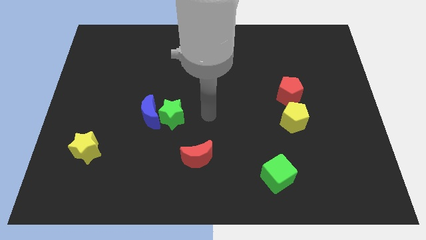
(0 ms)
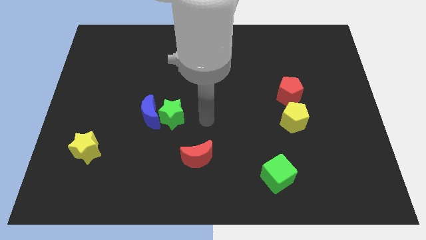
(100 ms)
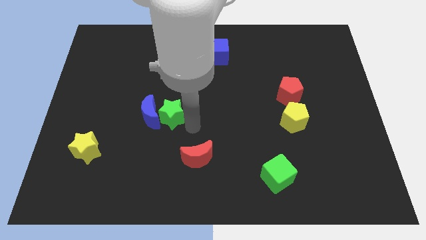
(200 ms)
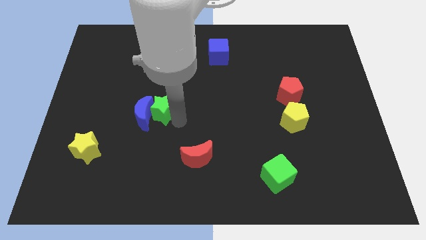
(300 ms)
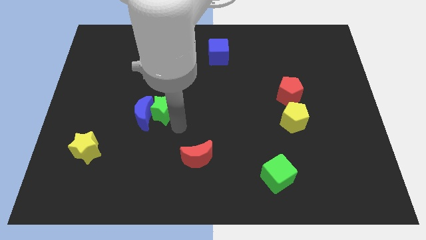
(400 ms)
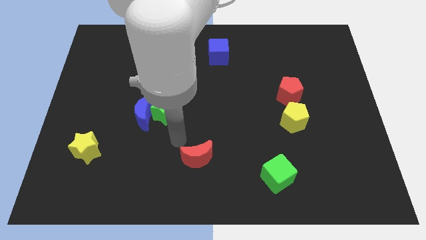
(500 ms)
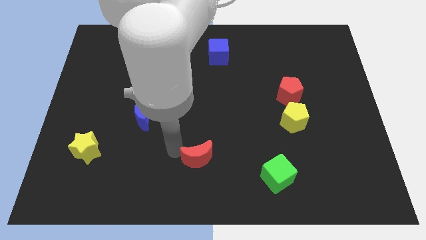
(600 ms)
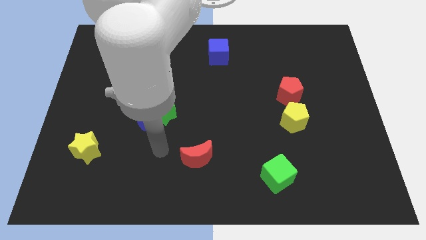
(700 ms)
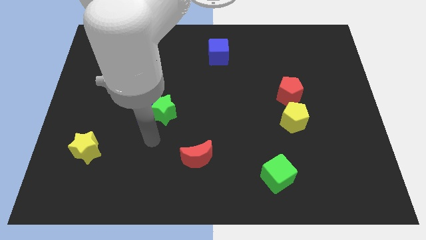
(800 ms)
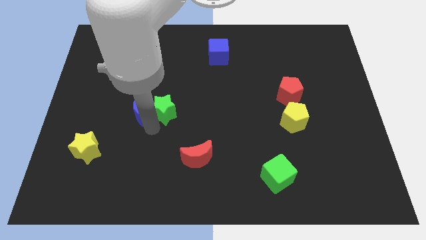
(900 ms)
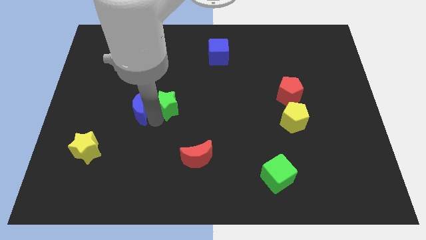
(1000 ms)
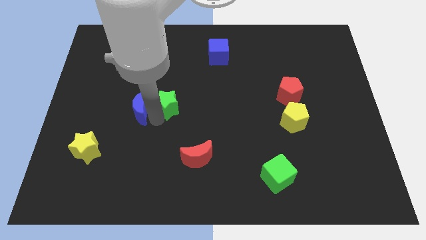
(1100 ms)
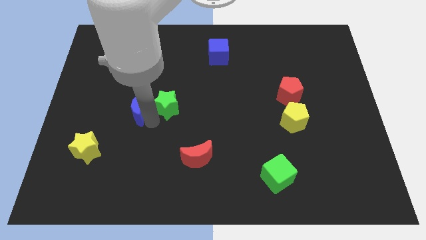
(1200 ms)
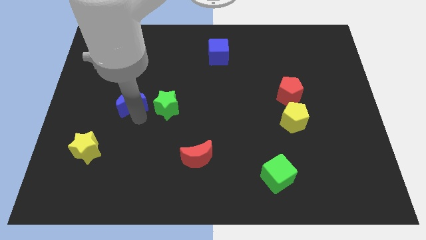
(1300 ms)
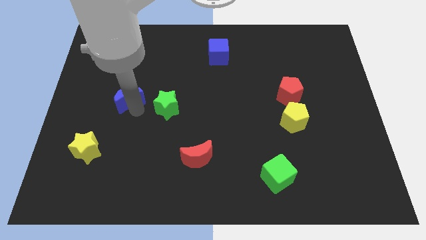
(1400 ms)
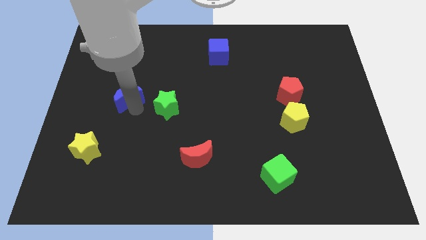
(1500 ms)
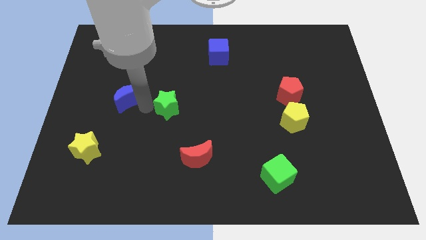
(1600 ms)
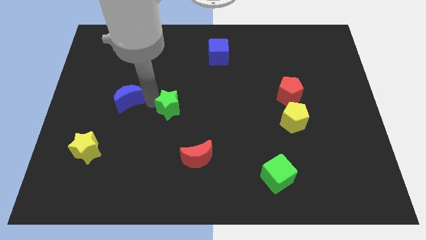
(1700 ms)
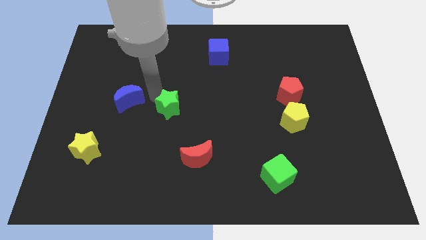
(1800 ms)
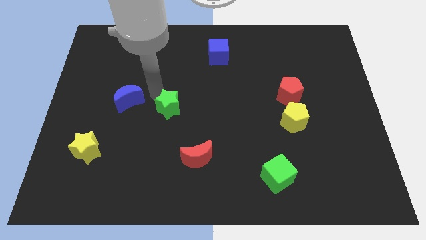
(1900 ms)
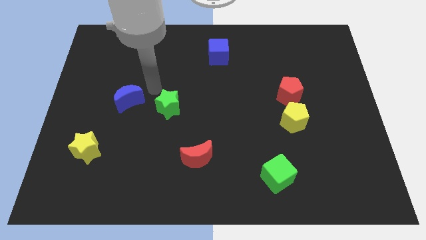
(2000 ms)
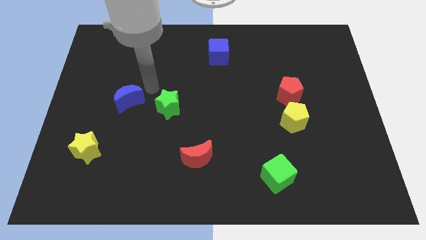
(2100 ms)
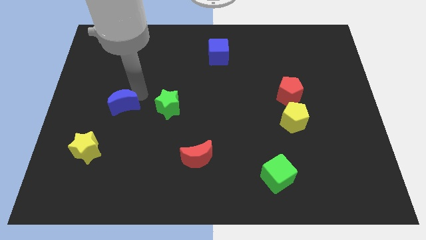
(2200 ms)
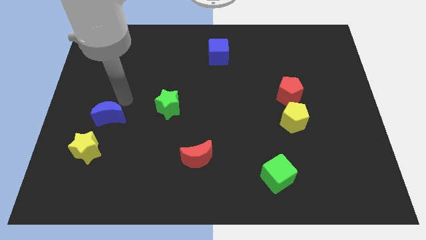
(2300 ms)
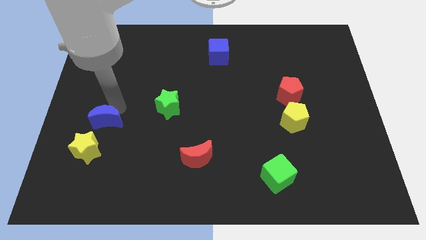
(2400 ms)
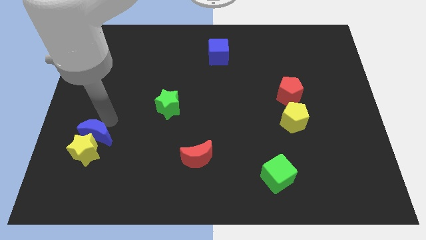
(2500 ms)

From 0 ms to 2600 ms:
move blue moon into the yellow star

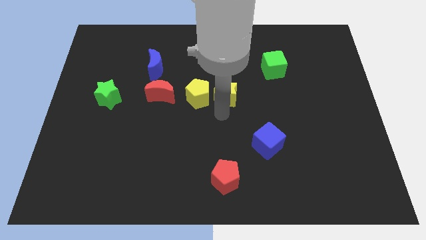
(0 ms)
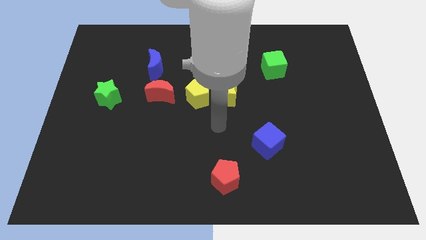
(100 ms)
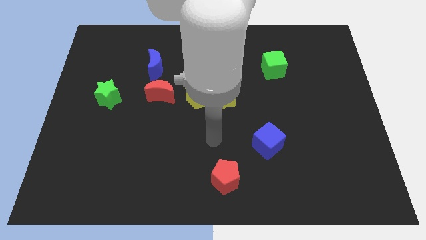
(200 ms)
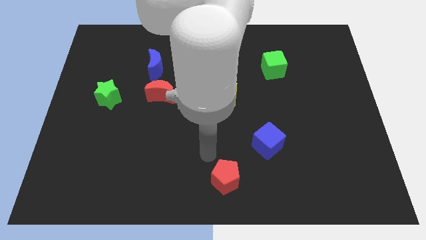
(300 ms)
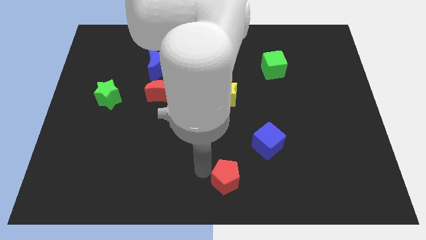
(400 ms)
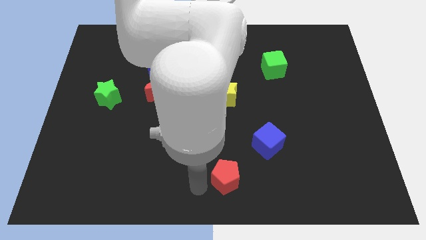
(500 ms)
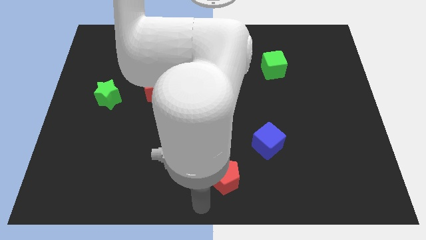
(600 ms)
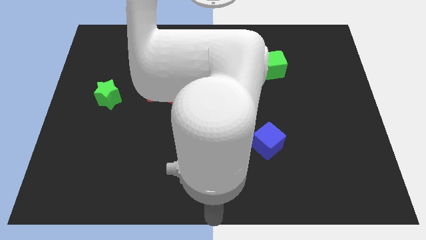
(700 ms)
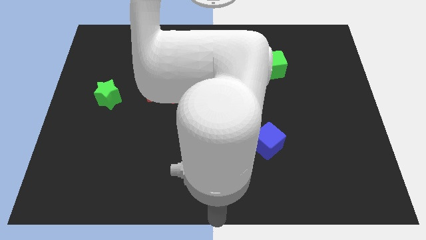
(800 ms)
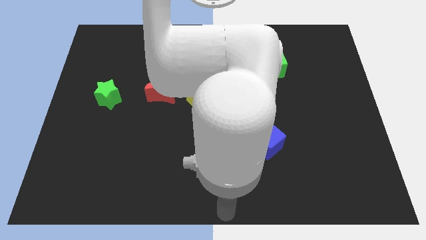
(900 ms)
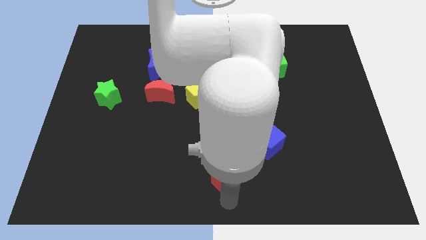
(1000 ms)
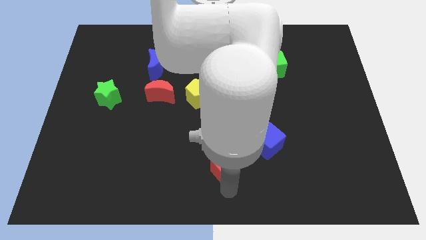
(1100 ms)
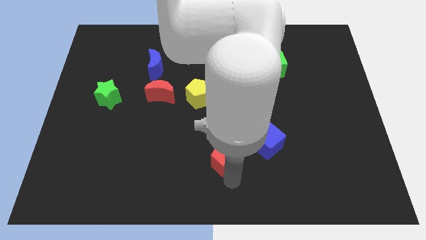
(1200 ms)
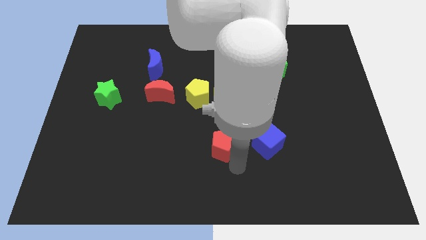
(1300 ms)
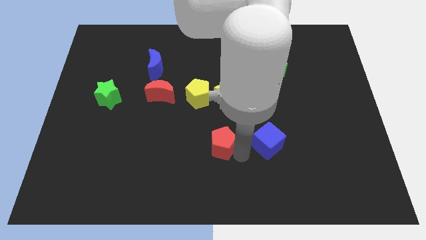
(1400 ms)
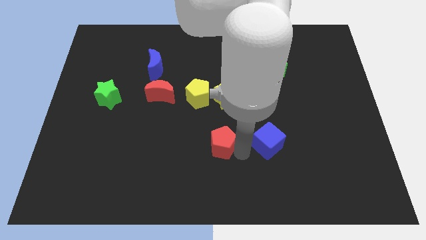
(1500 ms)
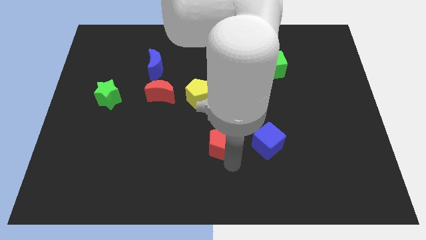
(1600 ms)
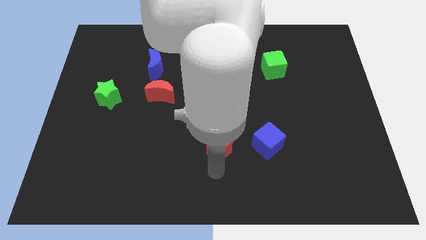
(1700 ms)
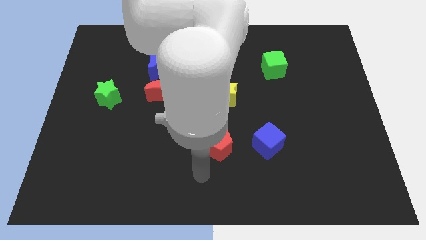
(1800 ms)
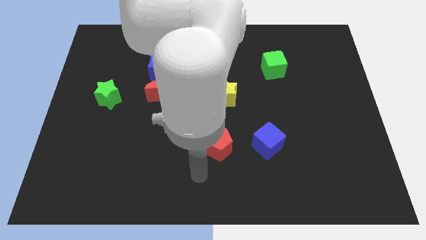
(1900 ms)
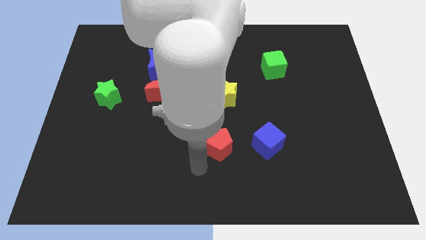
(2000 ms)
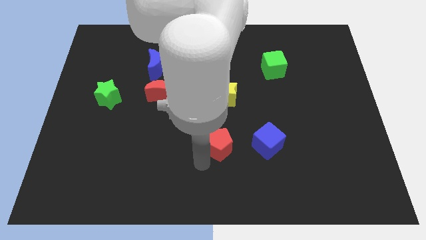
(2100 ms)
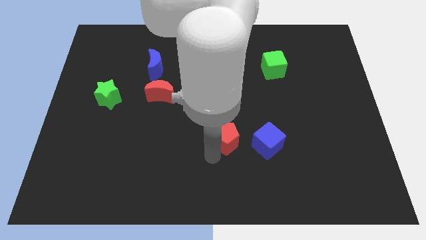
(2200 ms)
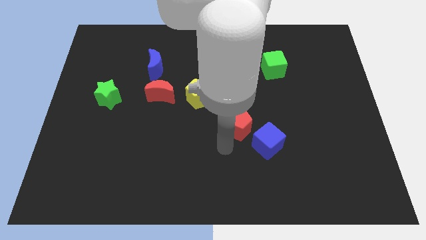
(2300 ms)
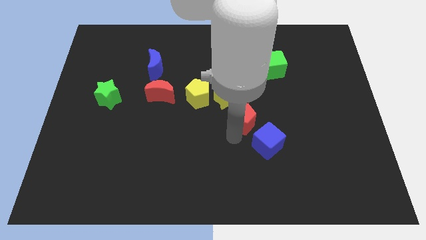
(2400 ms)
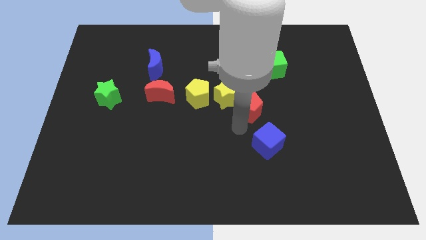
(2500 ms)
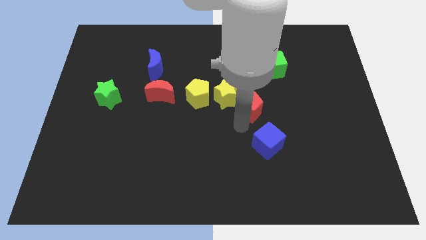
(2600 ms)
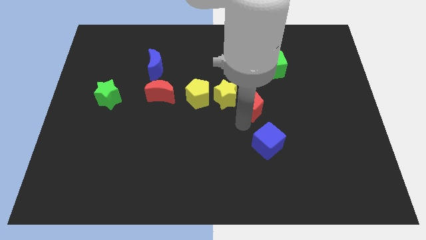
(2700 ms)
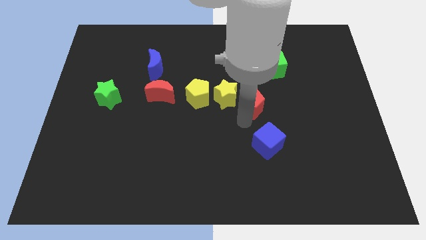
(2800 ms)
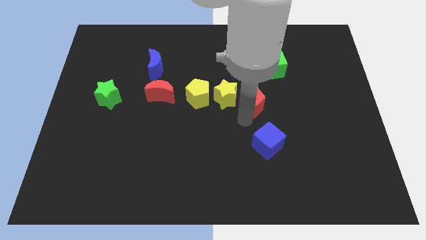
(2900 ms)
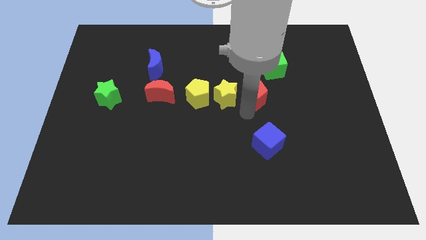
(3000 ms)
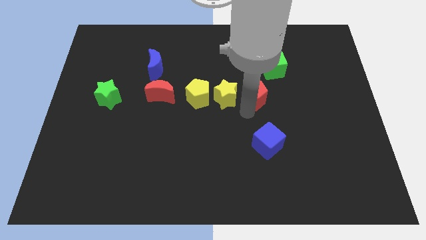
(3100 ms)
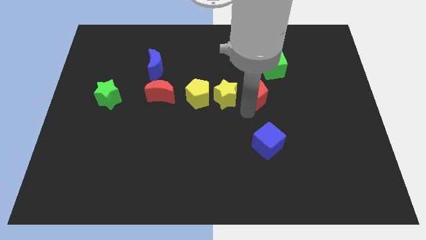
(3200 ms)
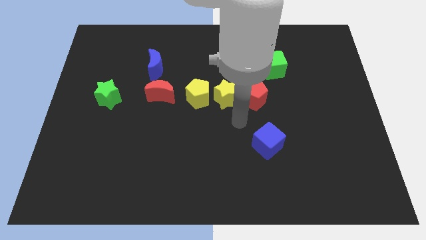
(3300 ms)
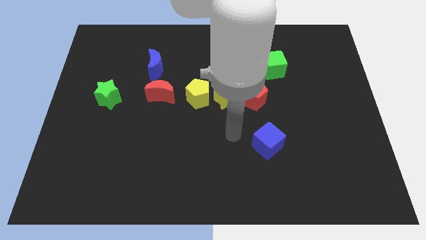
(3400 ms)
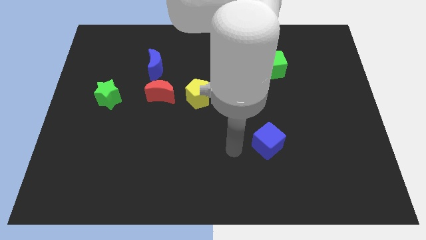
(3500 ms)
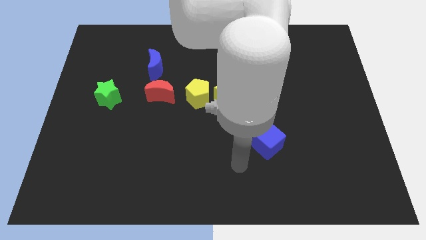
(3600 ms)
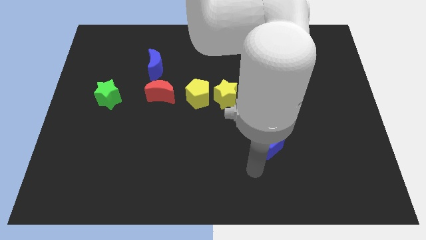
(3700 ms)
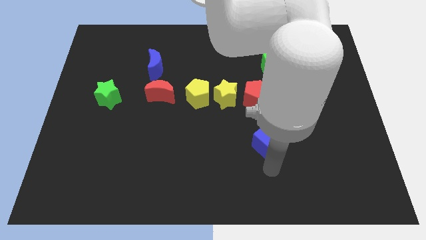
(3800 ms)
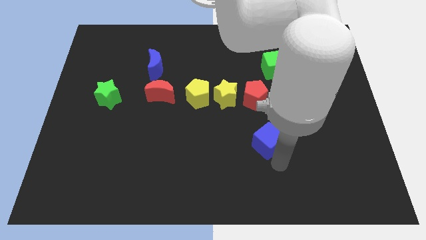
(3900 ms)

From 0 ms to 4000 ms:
push the red pentagon to the right side of the yellow star

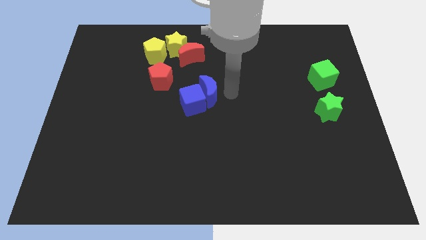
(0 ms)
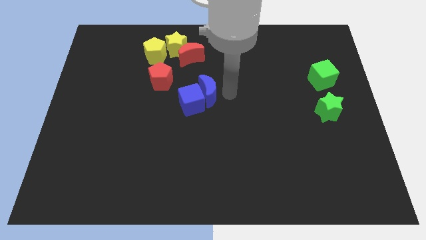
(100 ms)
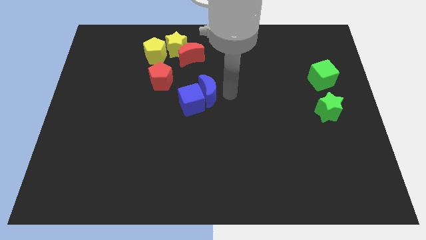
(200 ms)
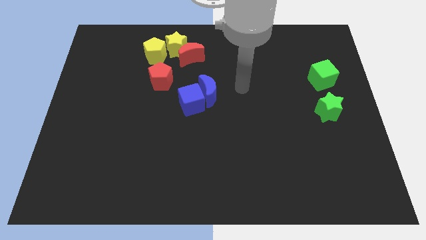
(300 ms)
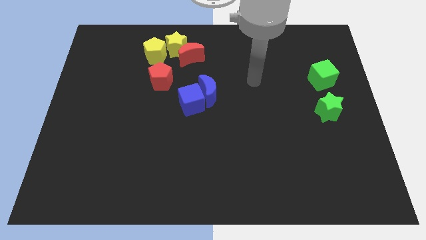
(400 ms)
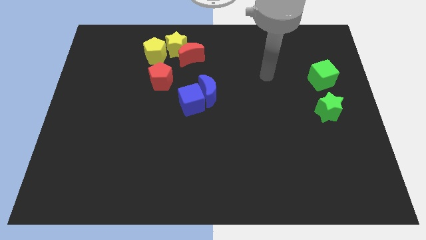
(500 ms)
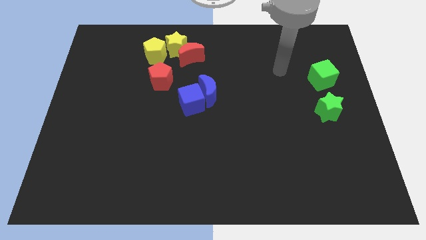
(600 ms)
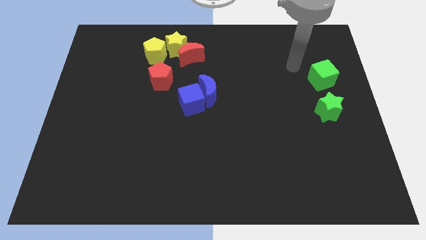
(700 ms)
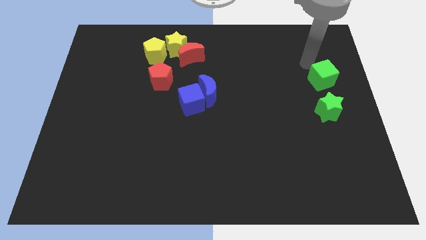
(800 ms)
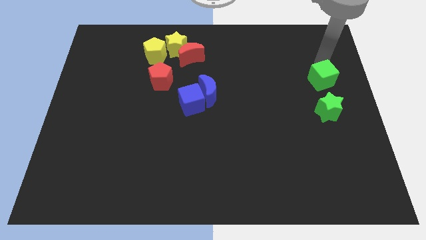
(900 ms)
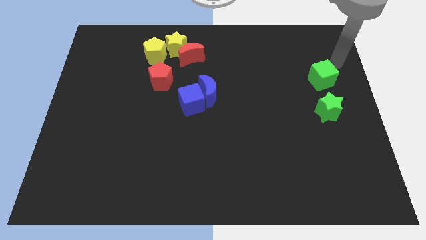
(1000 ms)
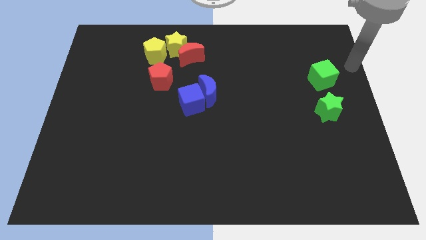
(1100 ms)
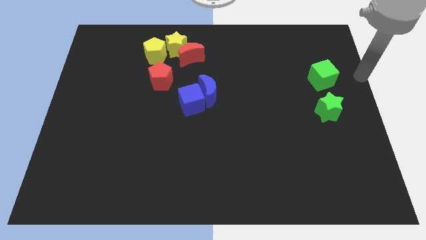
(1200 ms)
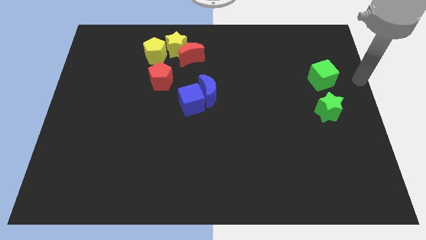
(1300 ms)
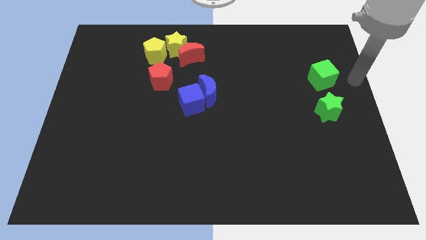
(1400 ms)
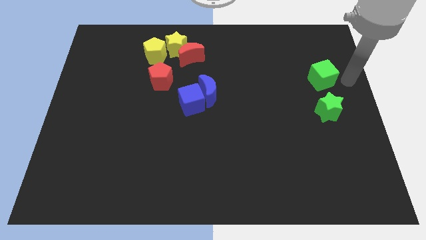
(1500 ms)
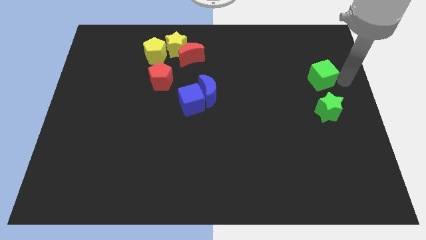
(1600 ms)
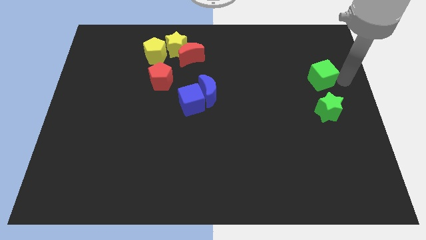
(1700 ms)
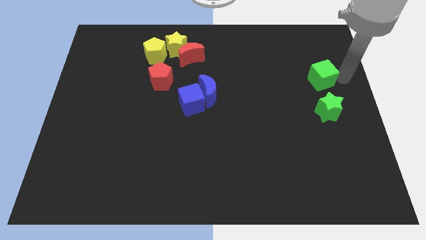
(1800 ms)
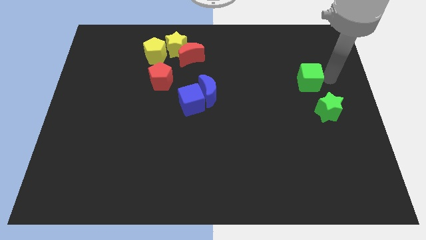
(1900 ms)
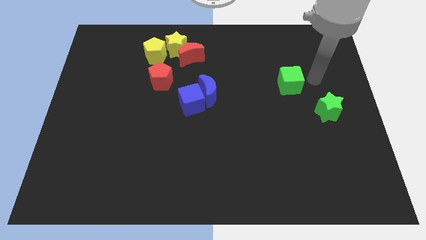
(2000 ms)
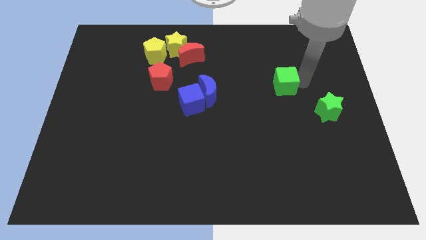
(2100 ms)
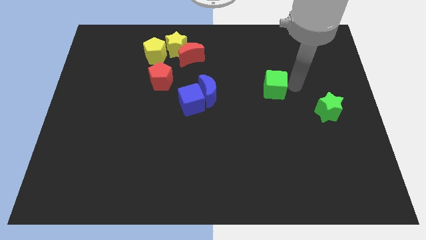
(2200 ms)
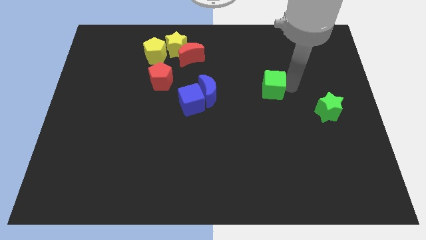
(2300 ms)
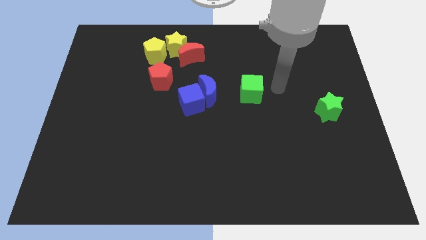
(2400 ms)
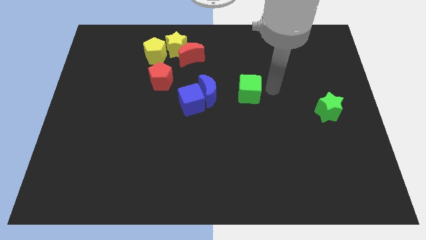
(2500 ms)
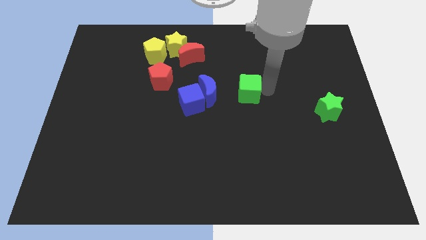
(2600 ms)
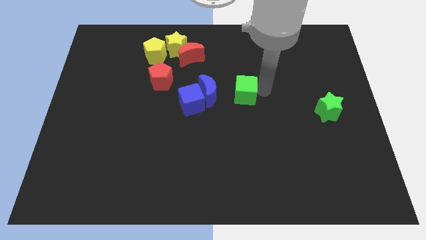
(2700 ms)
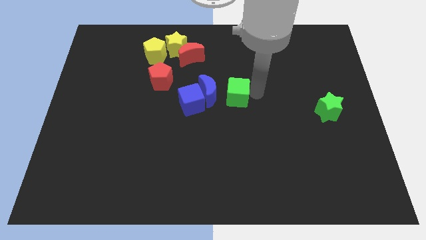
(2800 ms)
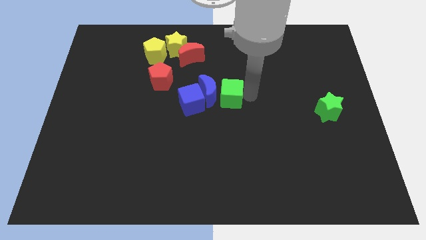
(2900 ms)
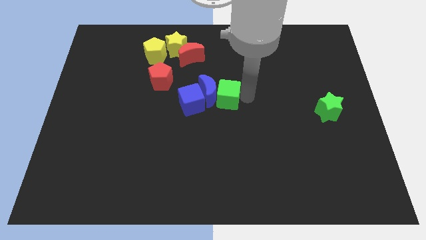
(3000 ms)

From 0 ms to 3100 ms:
move the green cube to the right of the blue crescent
